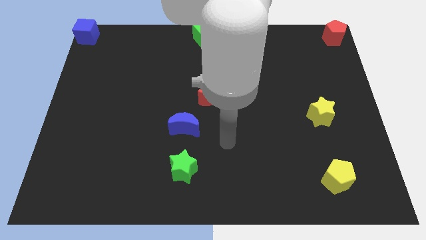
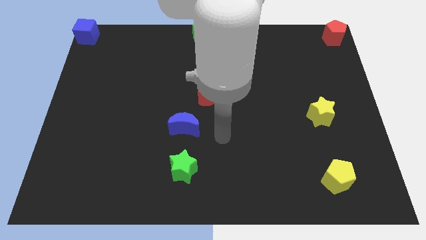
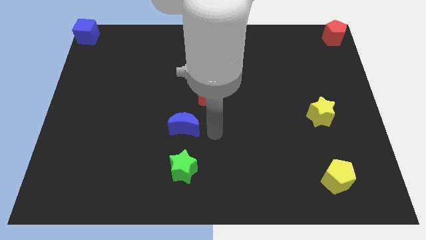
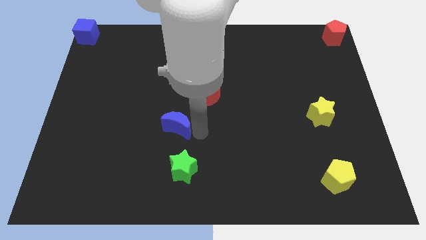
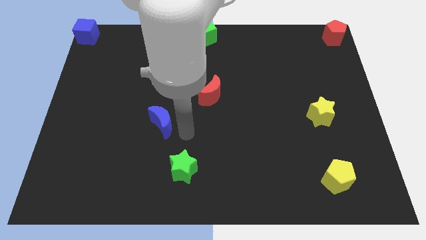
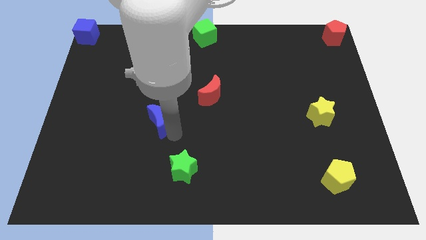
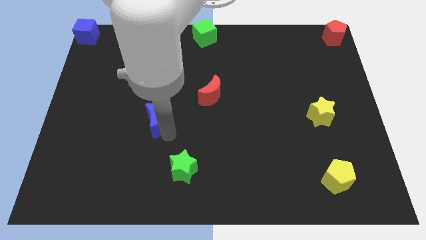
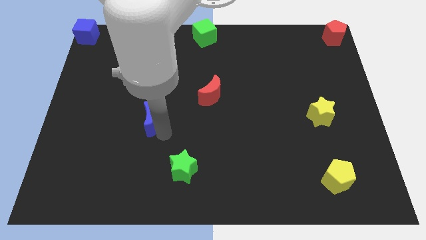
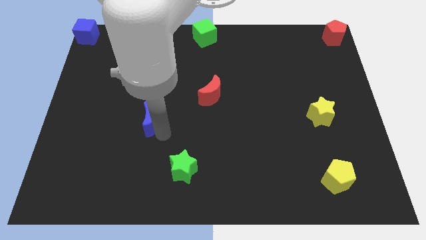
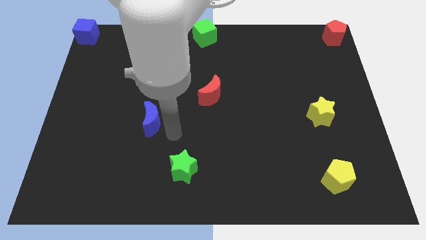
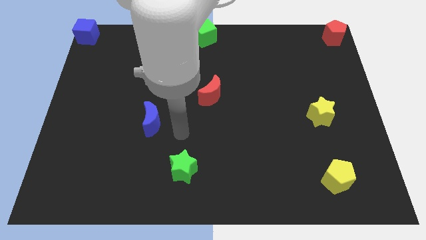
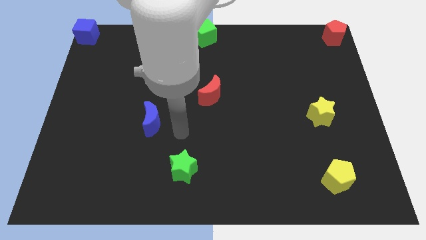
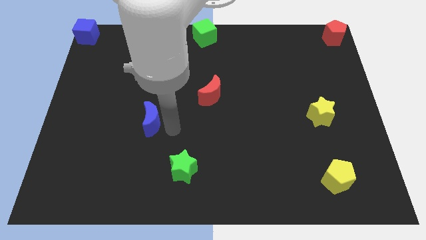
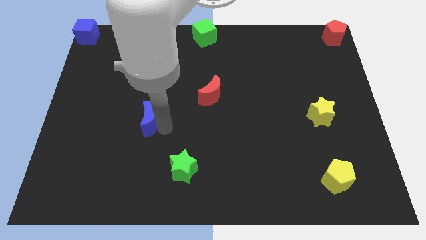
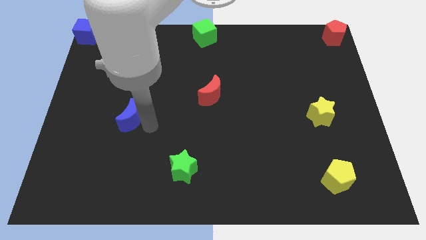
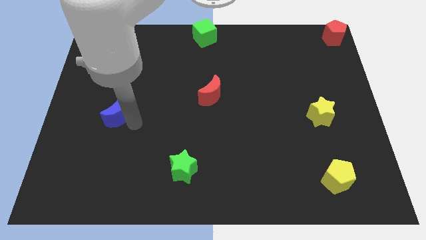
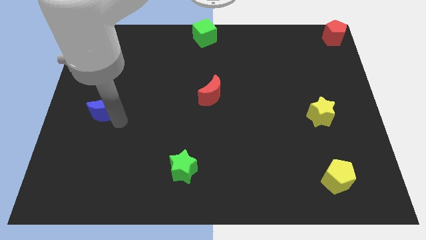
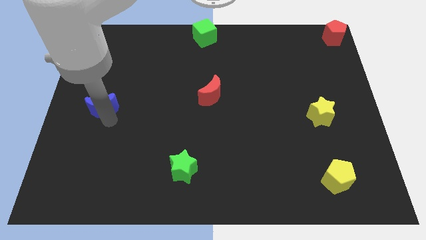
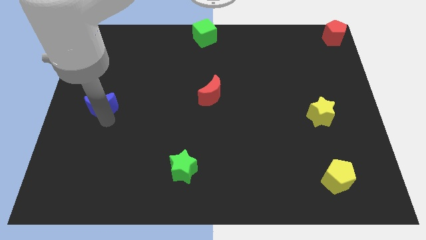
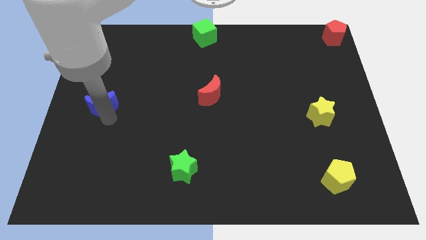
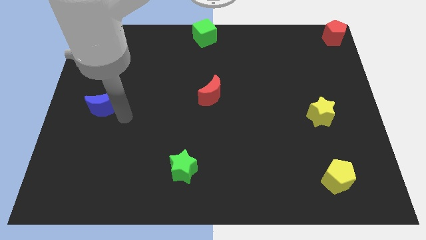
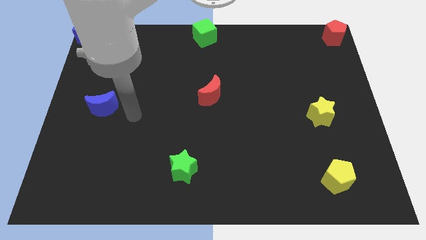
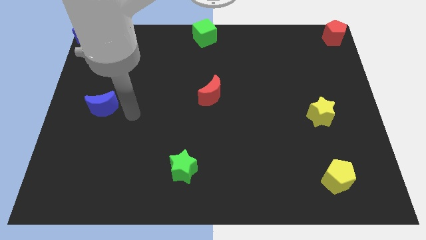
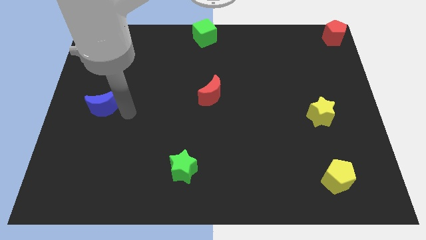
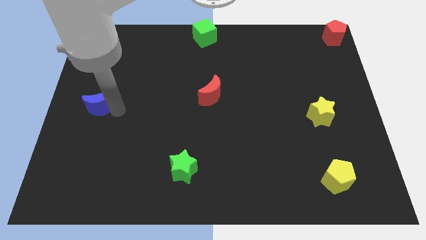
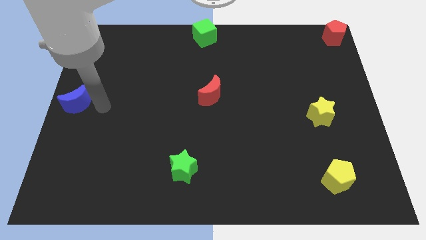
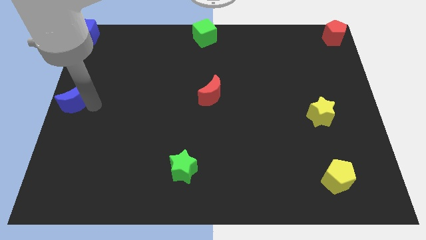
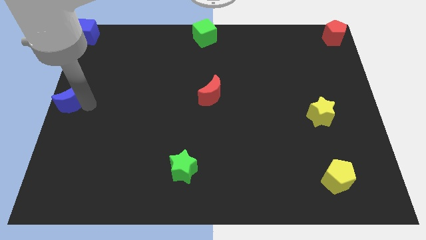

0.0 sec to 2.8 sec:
push the blue crescent to the left of the red crescent

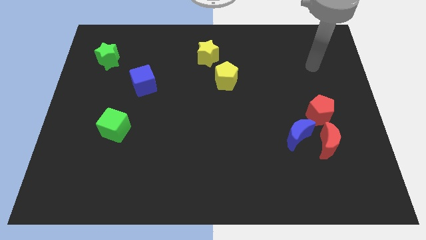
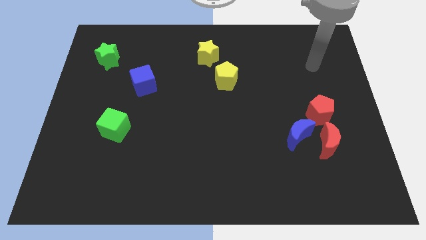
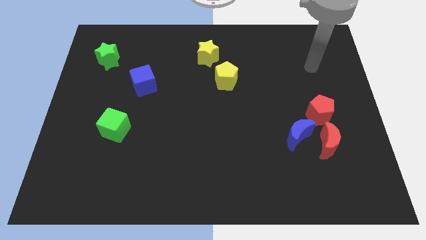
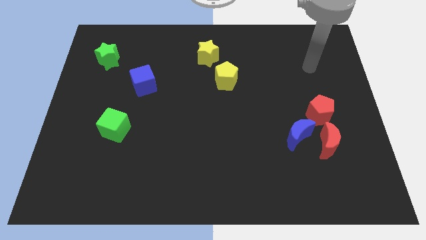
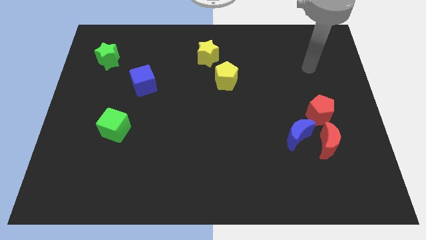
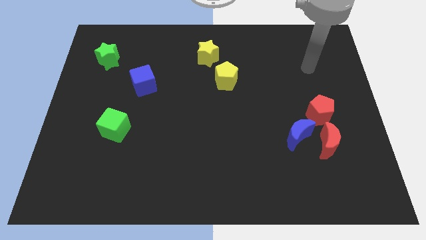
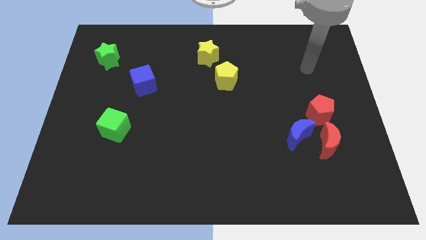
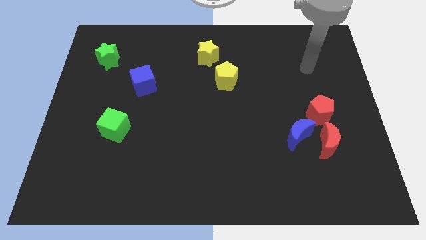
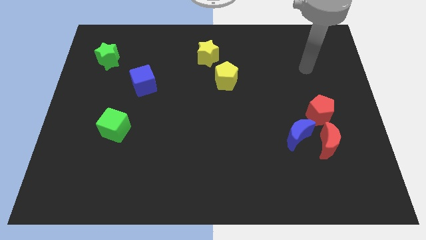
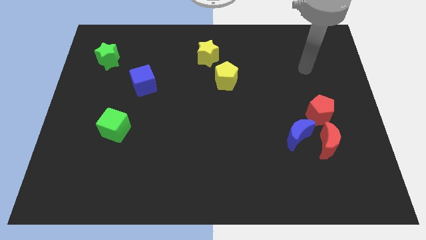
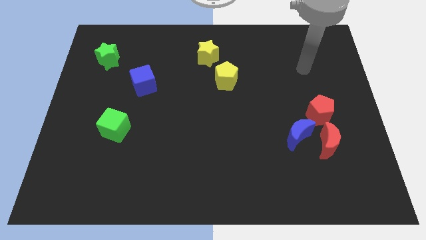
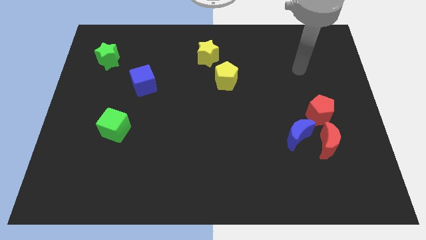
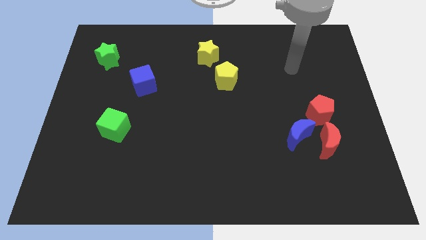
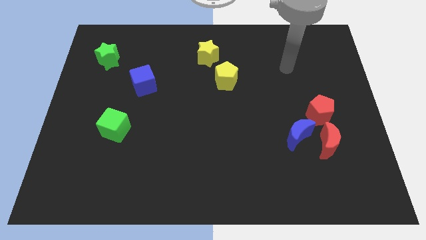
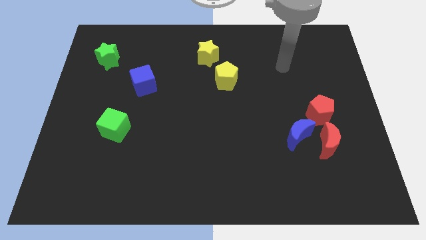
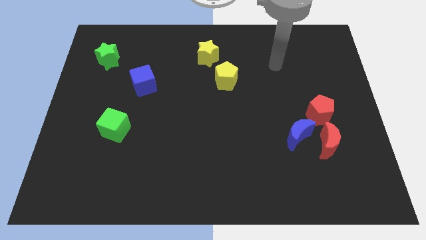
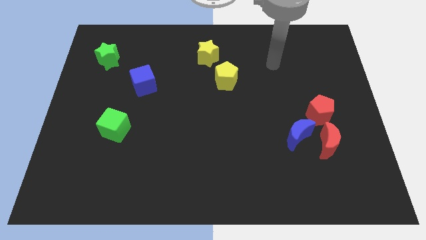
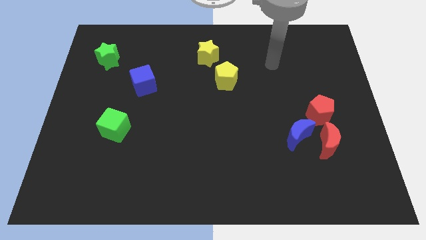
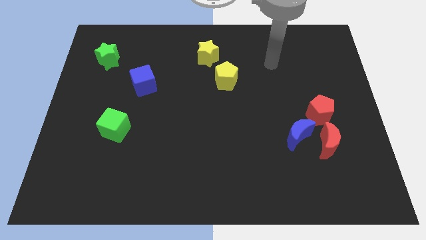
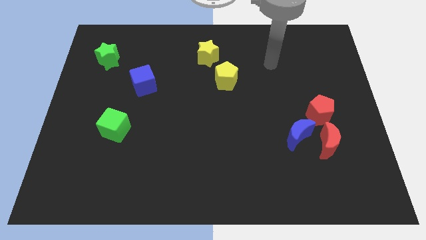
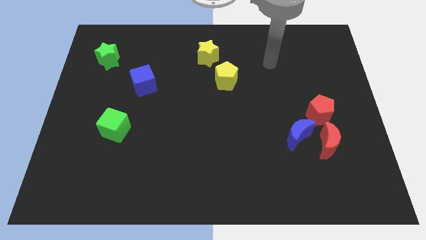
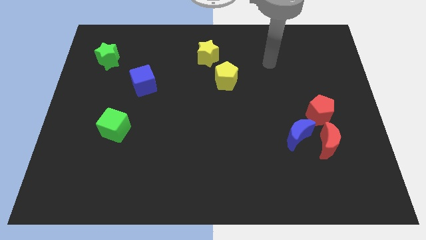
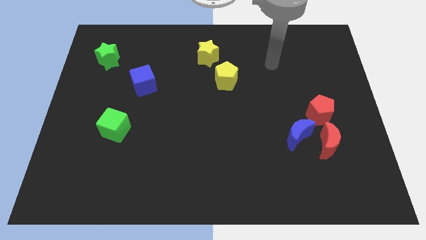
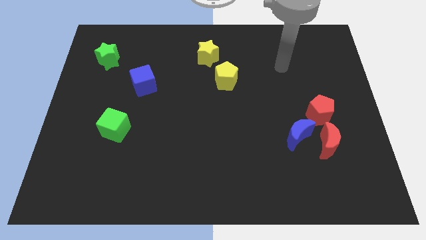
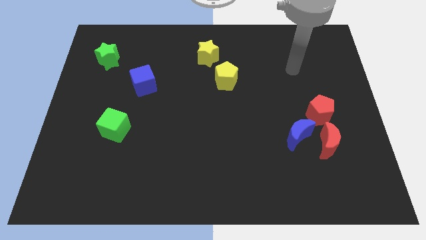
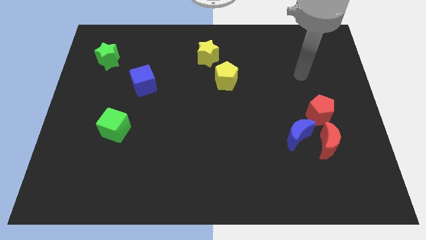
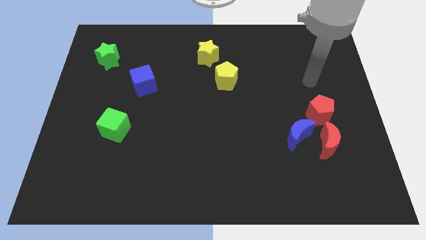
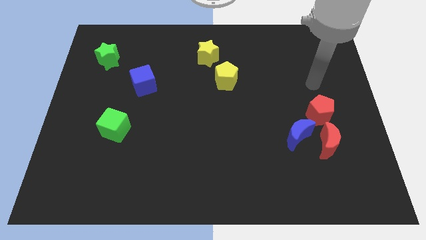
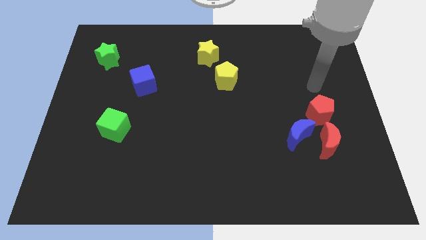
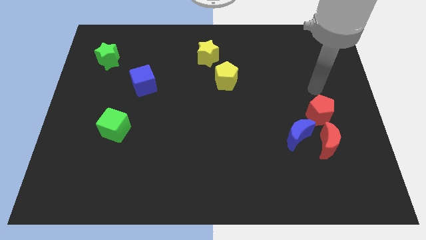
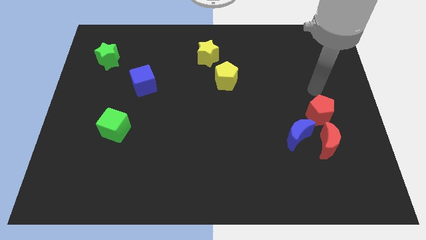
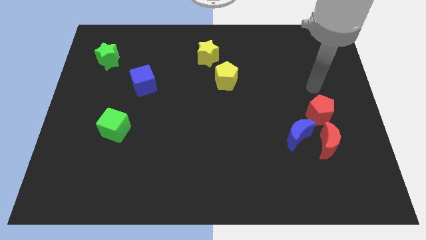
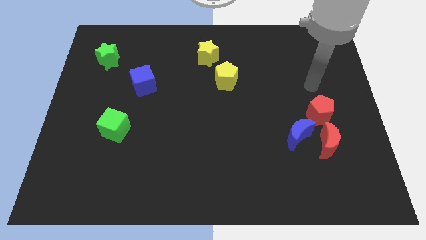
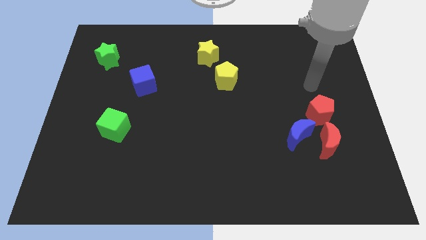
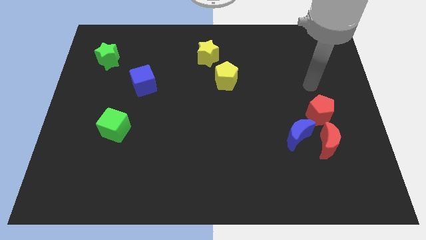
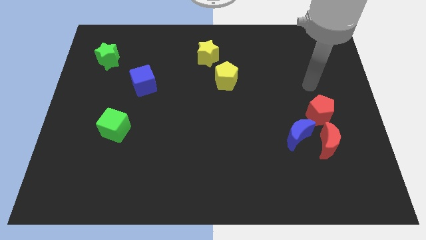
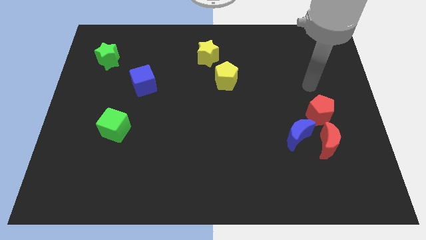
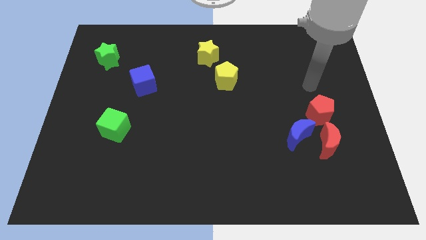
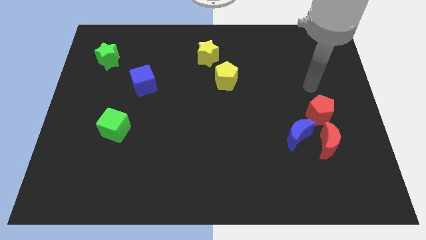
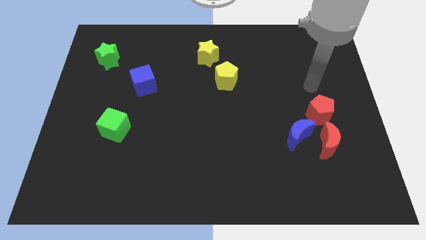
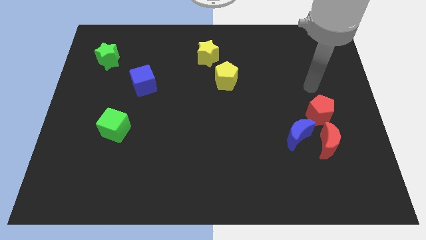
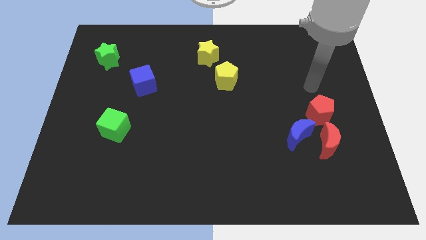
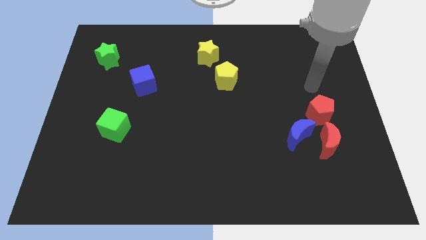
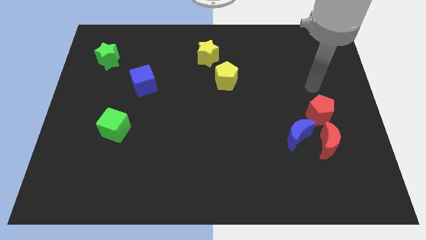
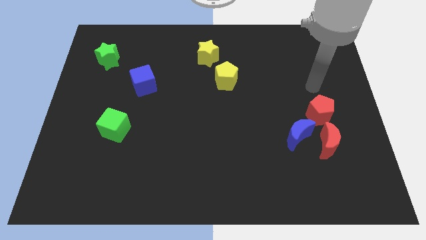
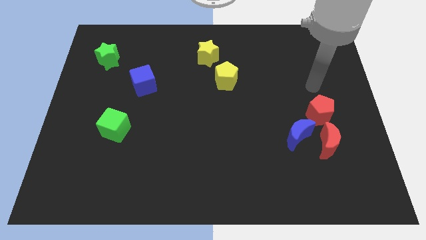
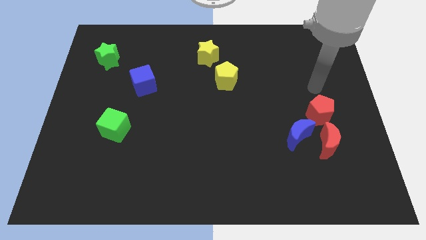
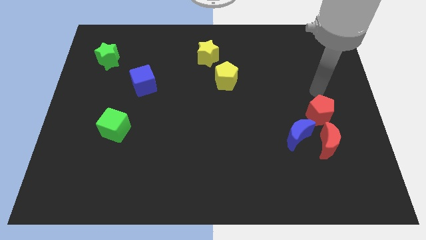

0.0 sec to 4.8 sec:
place your arm to the top of the red pentagon

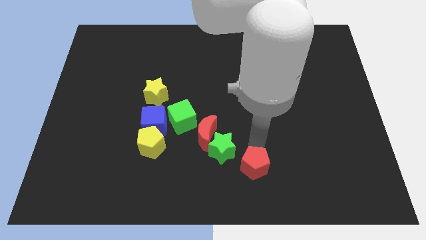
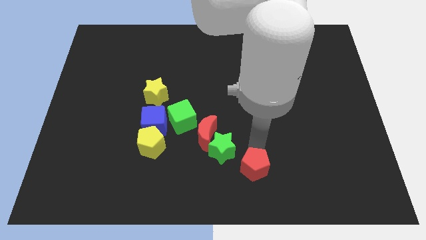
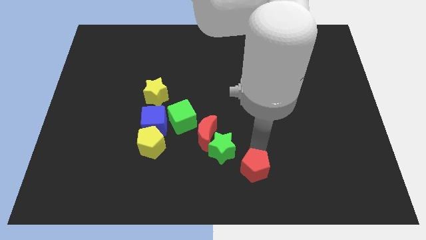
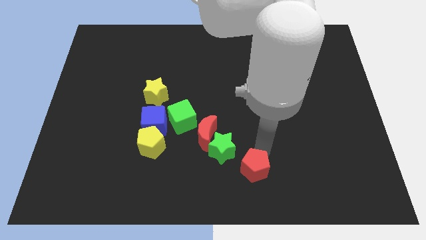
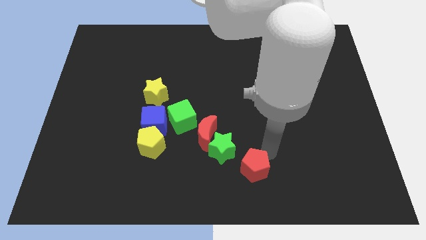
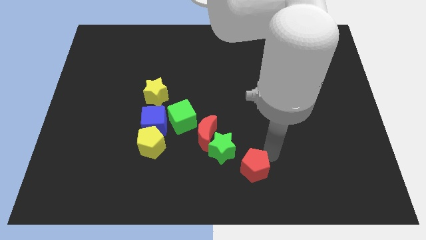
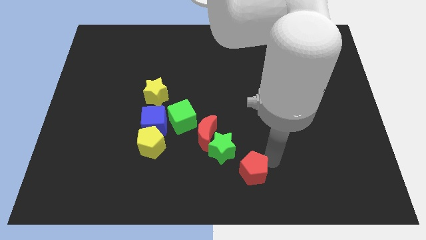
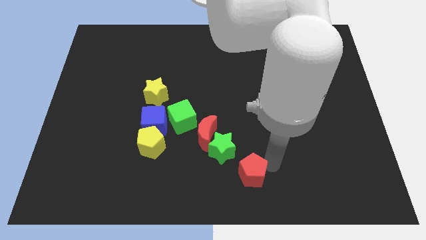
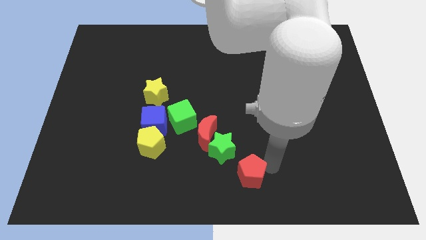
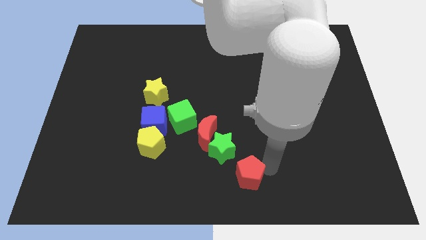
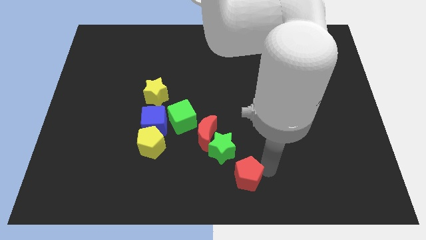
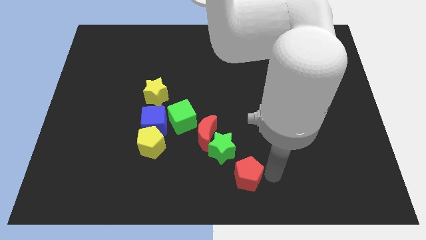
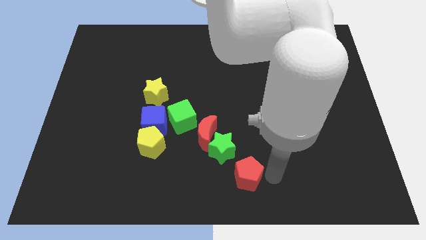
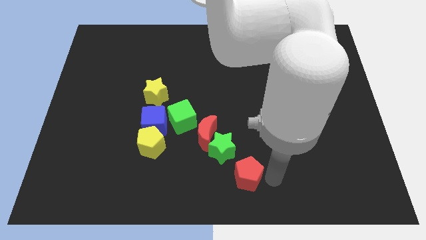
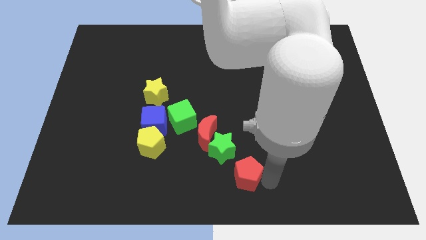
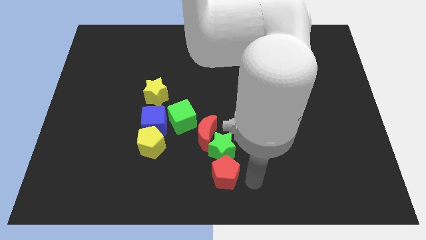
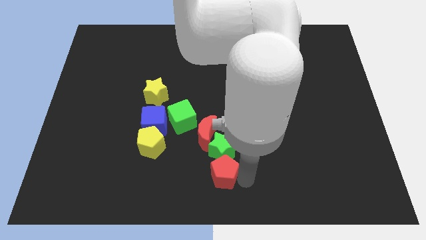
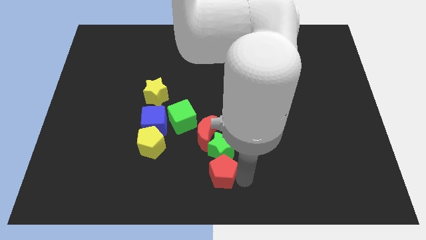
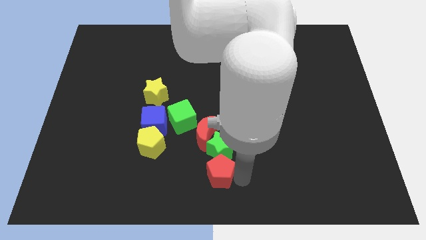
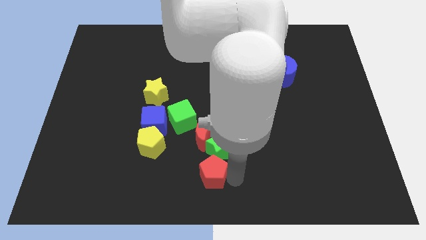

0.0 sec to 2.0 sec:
move the red pentagon vertically below the green star
